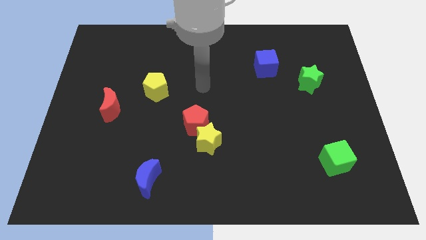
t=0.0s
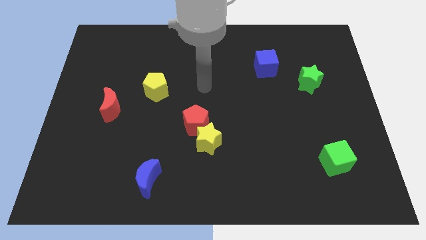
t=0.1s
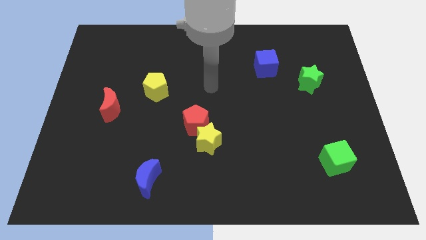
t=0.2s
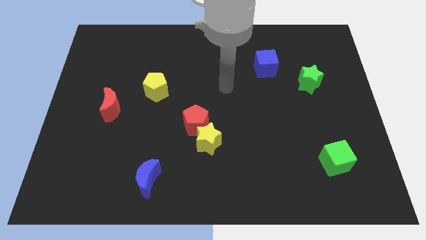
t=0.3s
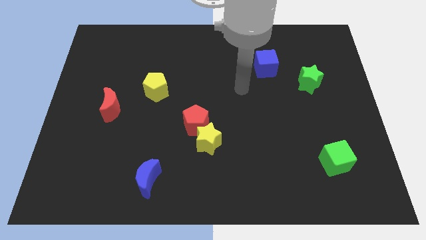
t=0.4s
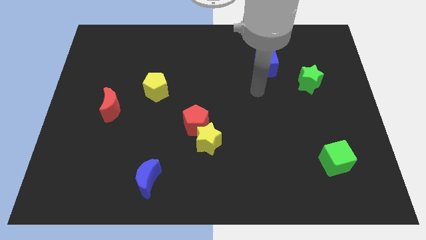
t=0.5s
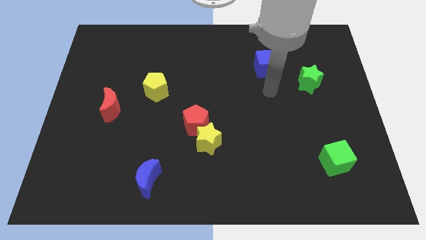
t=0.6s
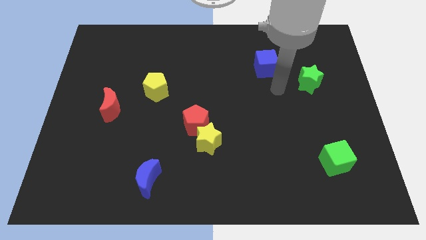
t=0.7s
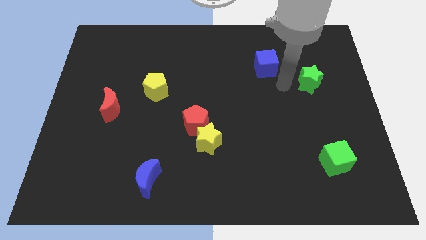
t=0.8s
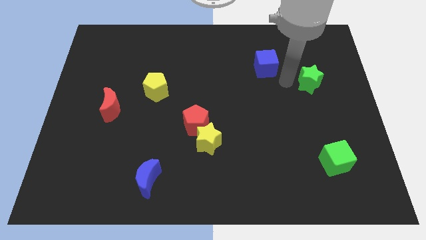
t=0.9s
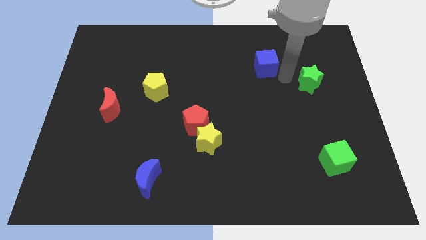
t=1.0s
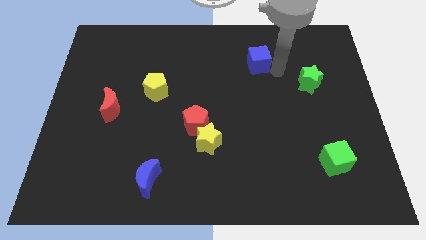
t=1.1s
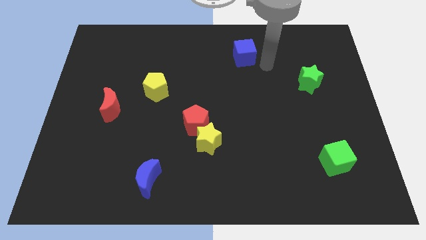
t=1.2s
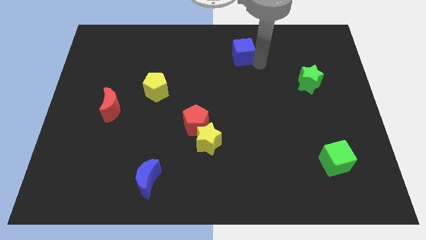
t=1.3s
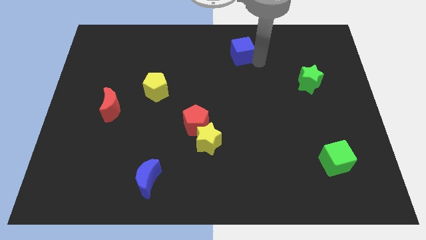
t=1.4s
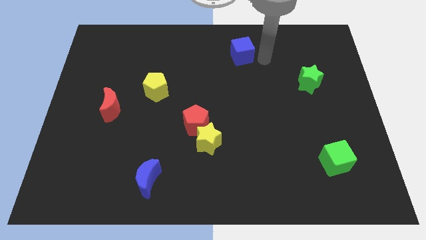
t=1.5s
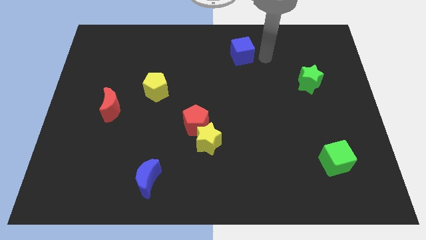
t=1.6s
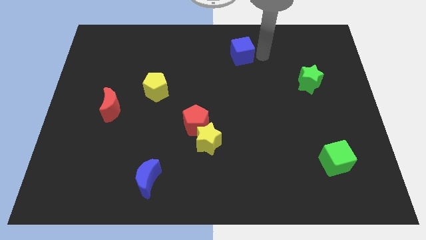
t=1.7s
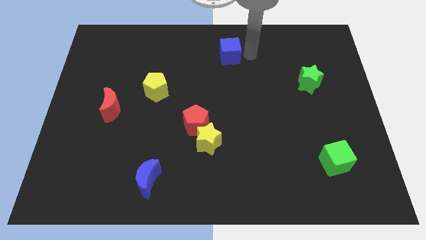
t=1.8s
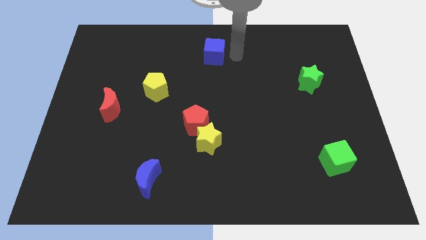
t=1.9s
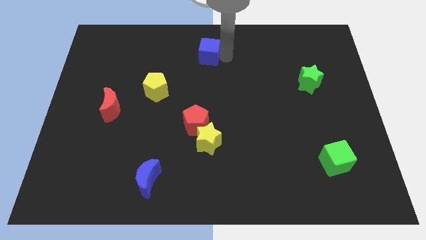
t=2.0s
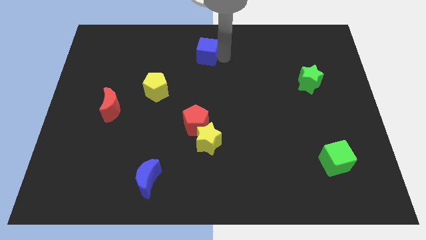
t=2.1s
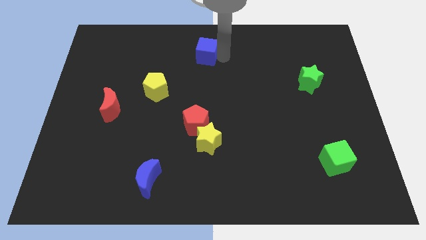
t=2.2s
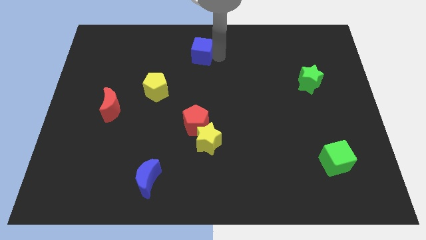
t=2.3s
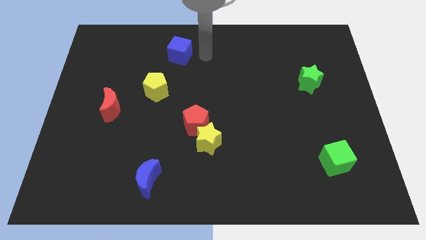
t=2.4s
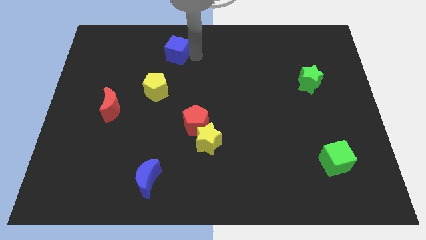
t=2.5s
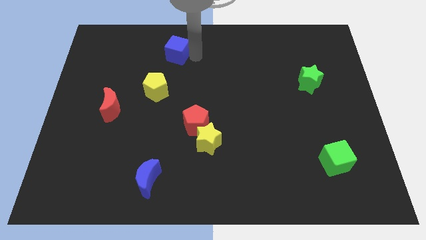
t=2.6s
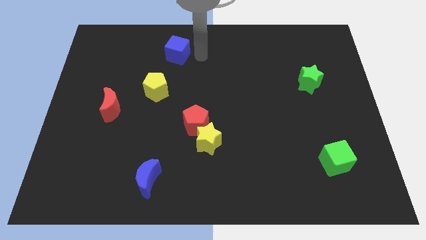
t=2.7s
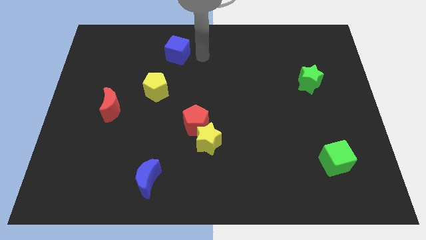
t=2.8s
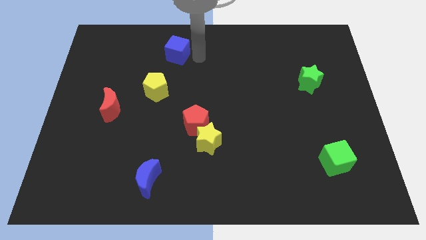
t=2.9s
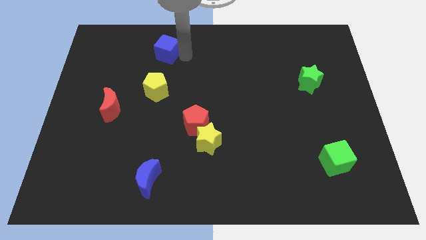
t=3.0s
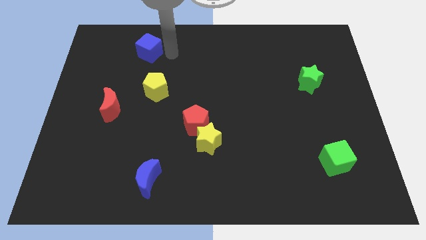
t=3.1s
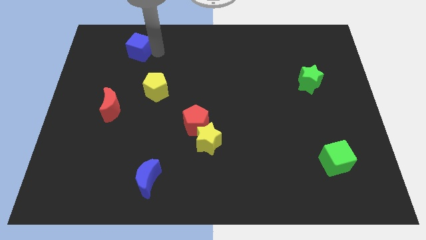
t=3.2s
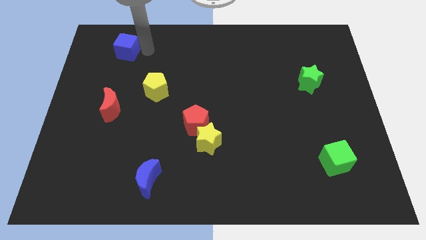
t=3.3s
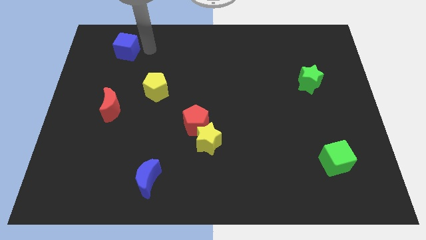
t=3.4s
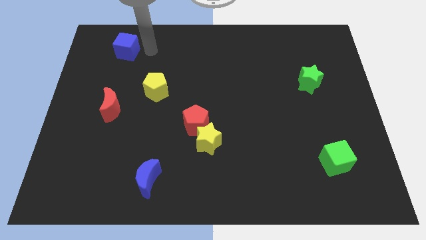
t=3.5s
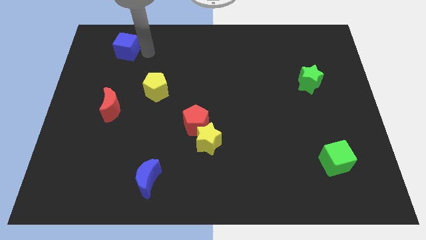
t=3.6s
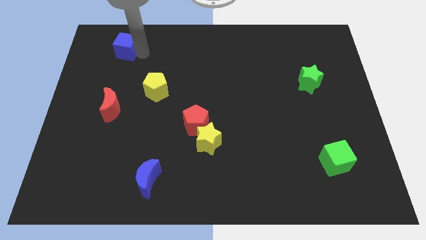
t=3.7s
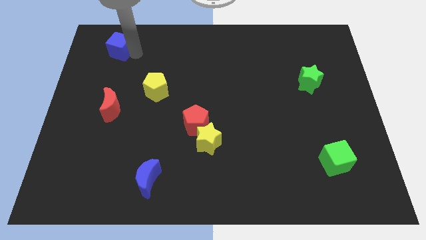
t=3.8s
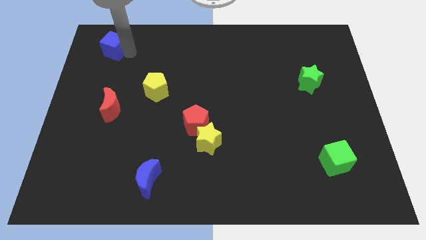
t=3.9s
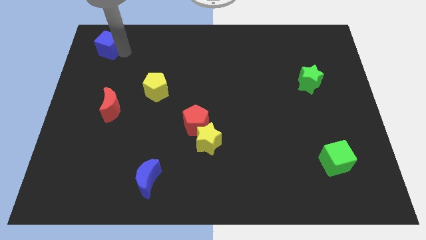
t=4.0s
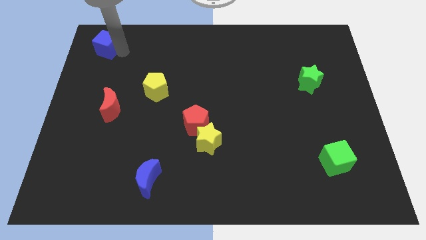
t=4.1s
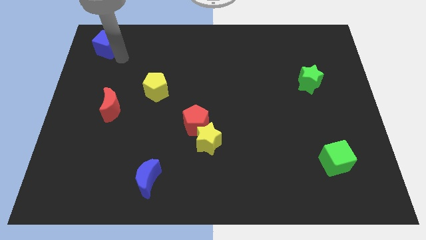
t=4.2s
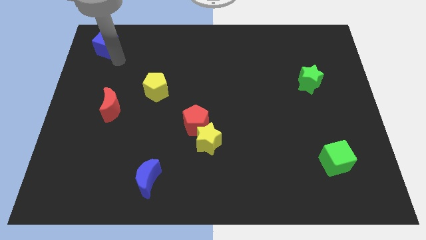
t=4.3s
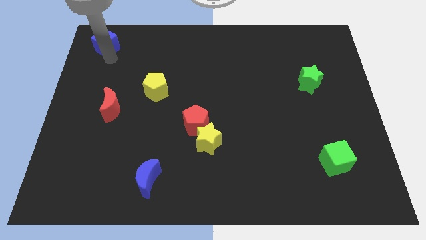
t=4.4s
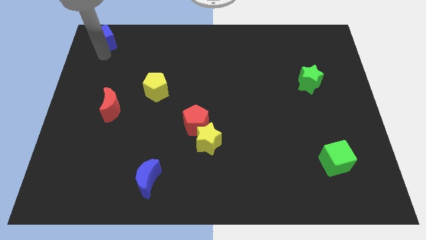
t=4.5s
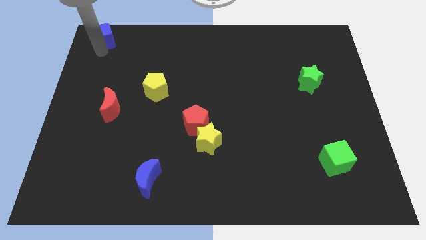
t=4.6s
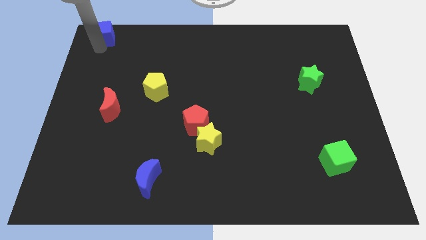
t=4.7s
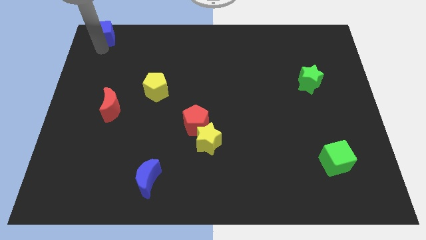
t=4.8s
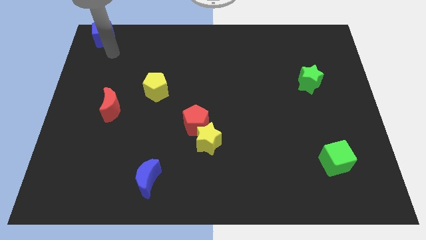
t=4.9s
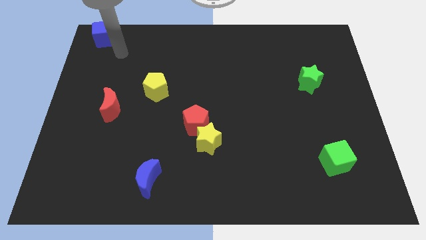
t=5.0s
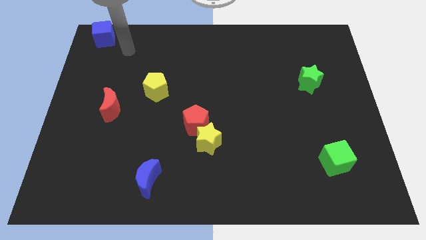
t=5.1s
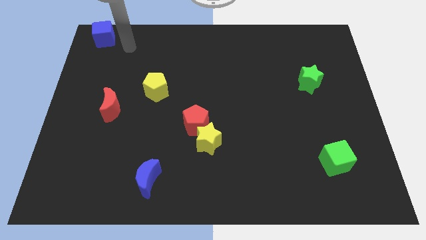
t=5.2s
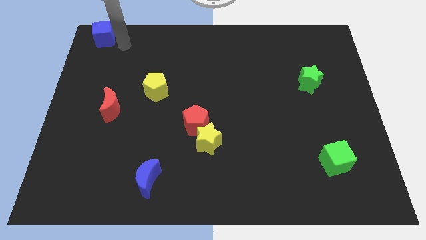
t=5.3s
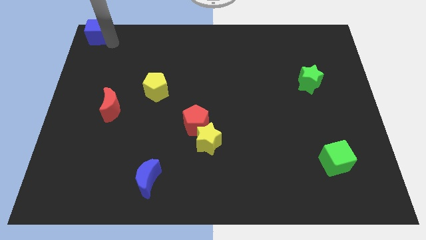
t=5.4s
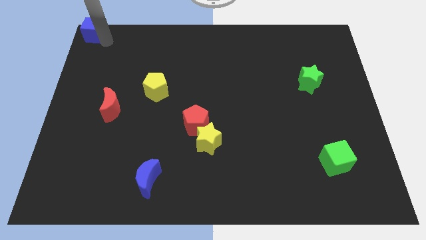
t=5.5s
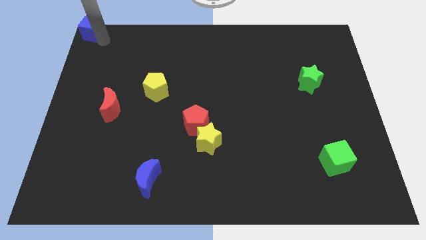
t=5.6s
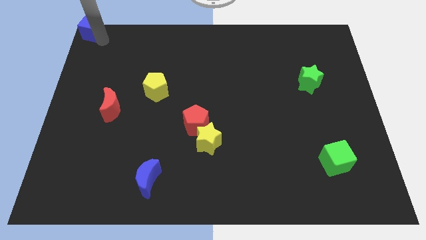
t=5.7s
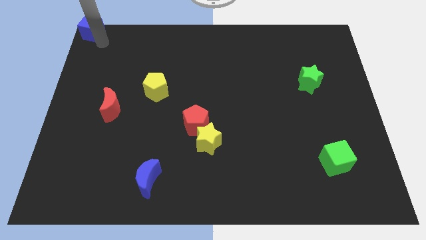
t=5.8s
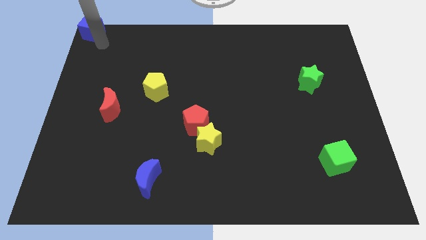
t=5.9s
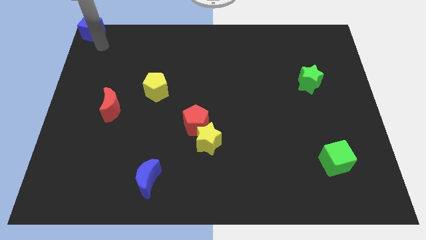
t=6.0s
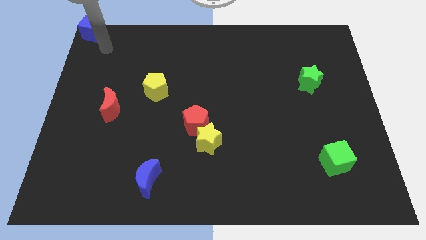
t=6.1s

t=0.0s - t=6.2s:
push blue cube towards top left side of the board

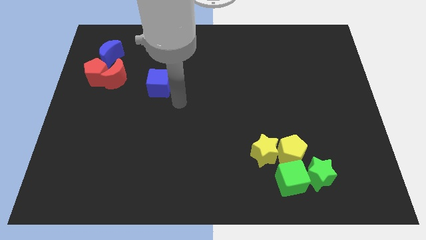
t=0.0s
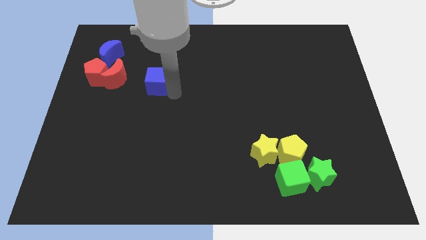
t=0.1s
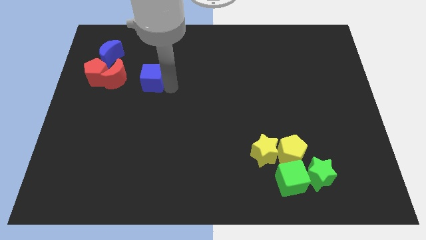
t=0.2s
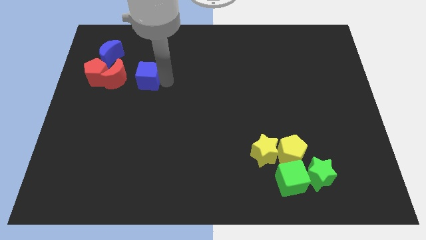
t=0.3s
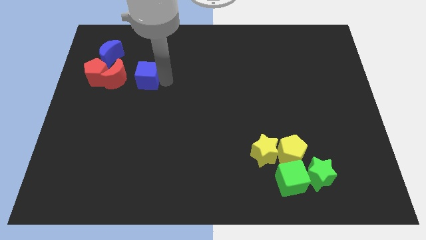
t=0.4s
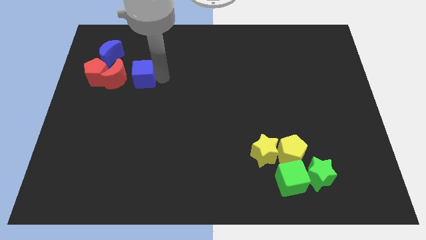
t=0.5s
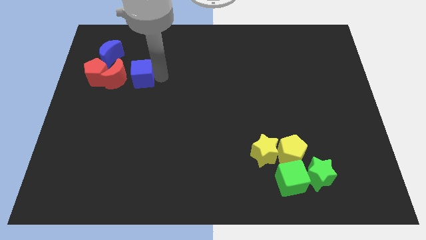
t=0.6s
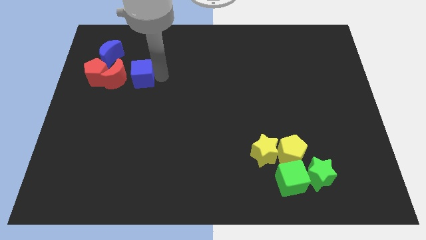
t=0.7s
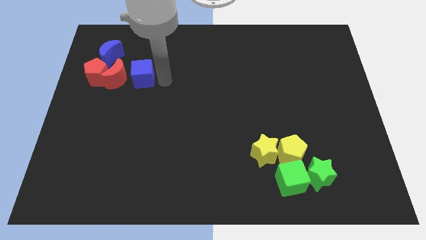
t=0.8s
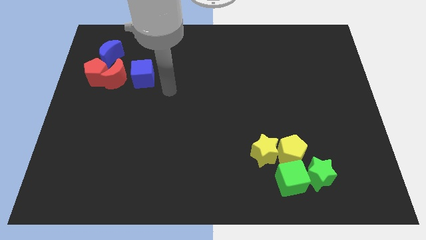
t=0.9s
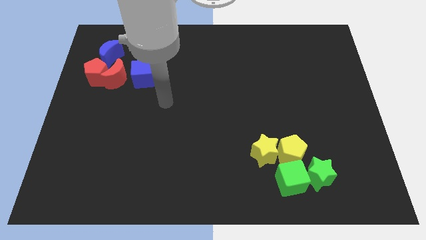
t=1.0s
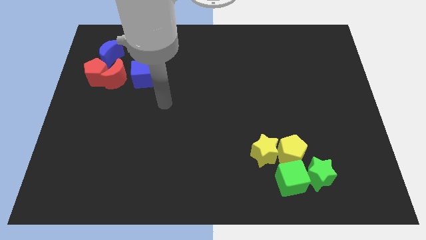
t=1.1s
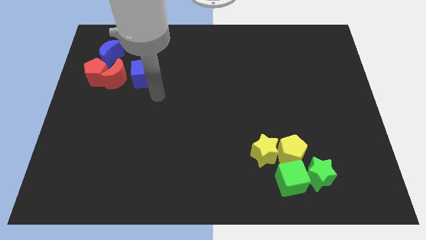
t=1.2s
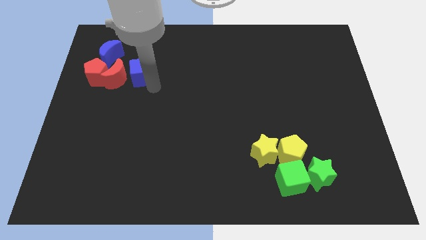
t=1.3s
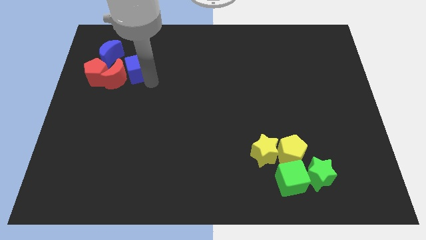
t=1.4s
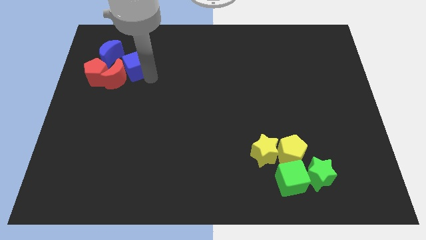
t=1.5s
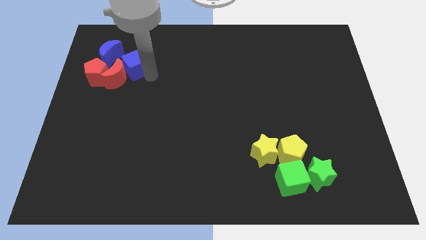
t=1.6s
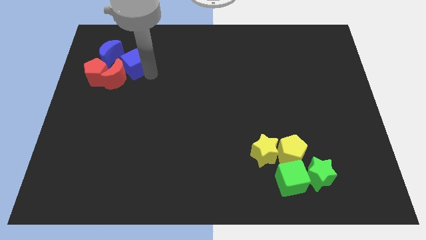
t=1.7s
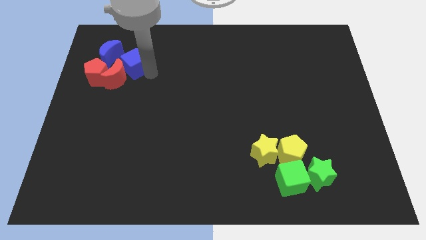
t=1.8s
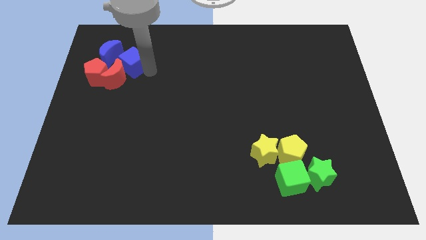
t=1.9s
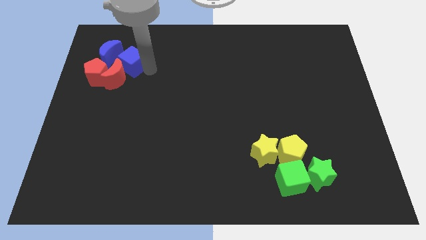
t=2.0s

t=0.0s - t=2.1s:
slide blue cube right to the blue moon

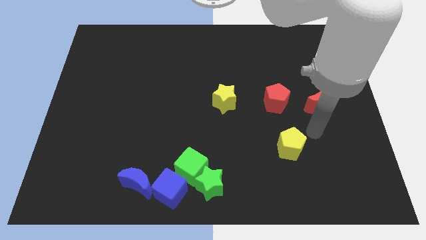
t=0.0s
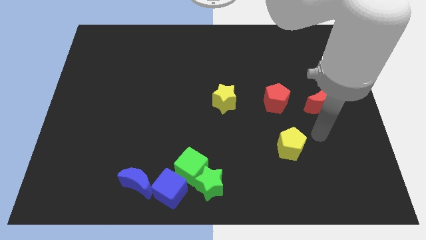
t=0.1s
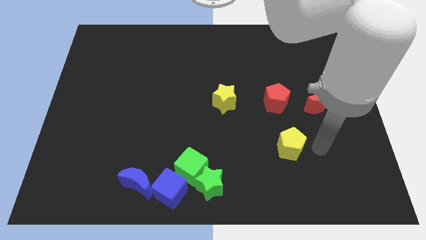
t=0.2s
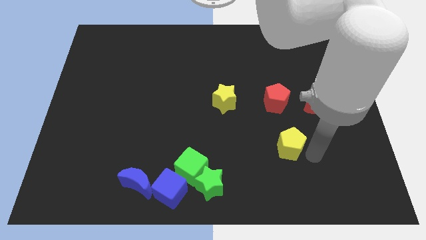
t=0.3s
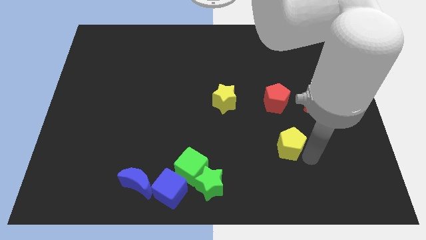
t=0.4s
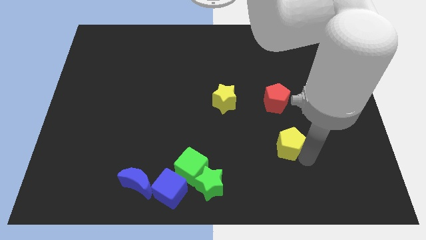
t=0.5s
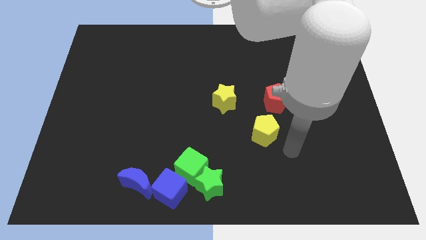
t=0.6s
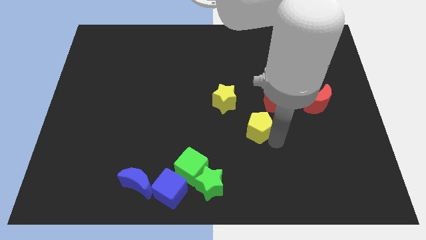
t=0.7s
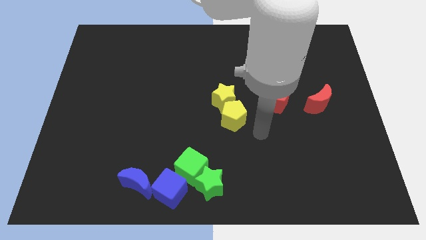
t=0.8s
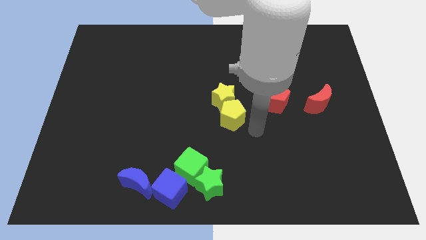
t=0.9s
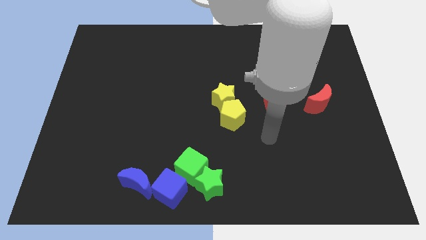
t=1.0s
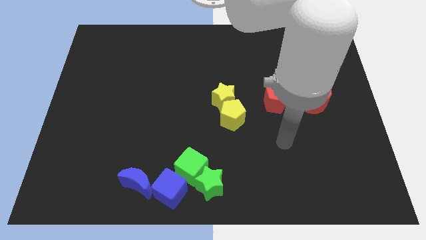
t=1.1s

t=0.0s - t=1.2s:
slide the yellow pentagon into the yellow star
